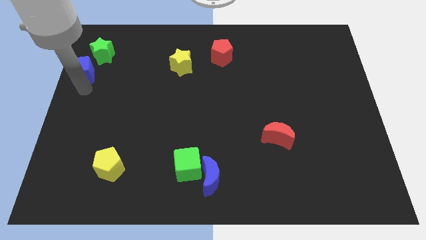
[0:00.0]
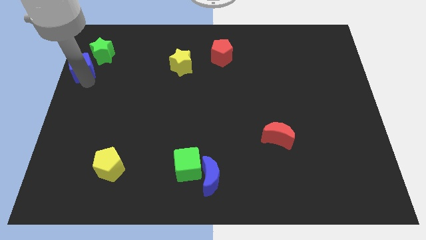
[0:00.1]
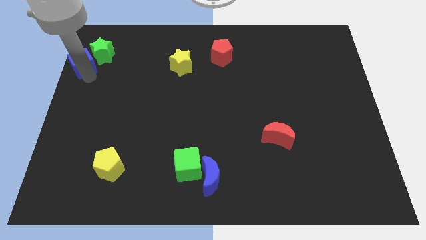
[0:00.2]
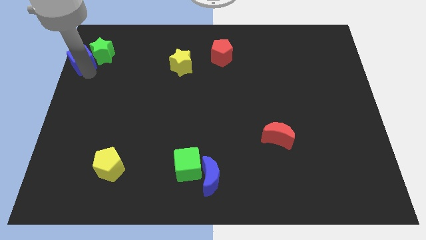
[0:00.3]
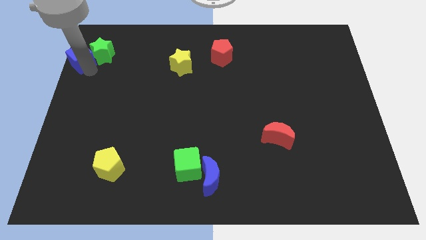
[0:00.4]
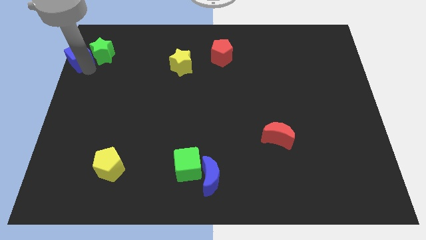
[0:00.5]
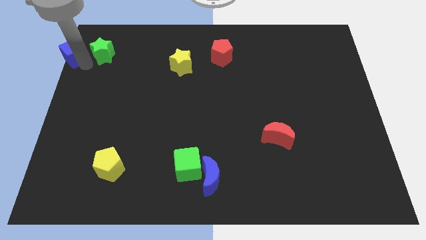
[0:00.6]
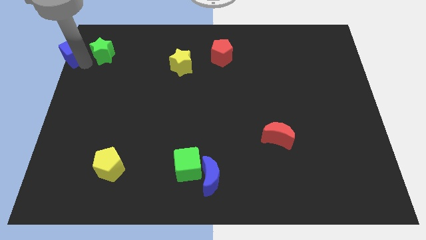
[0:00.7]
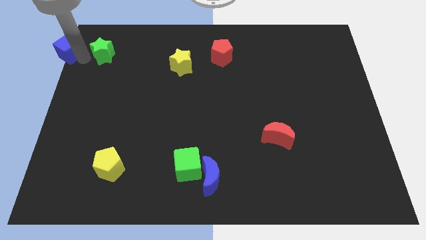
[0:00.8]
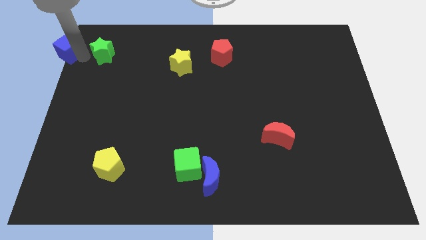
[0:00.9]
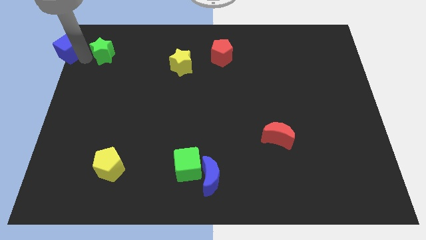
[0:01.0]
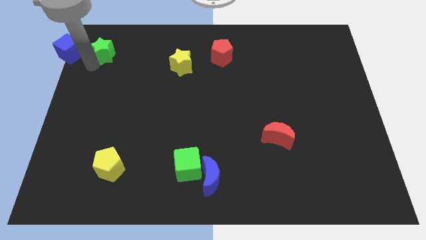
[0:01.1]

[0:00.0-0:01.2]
put the blue cube to the left side of the green star

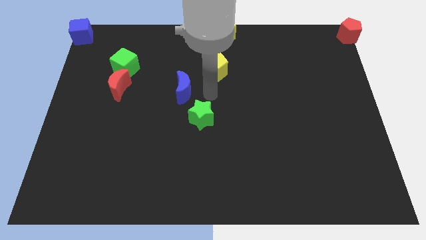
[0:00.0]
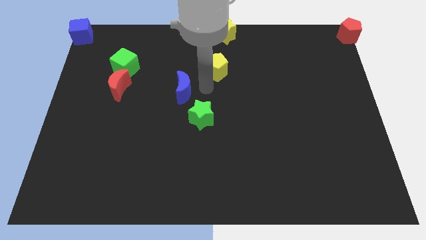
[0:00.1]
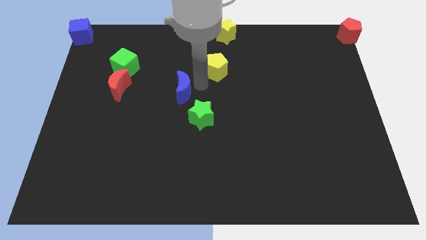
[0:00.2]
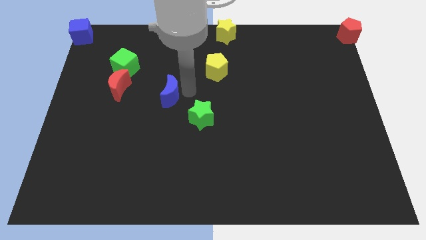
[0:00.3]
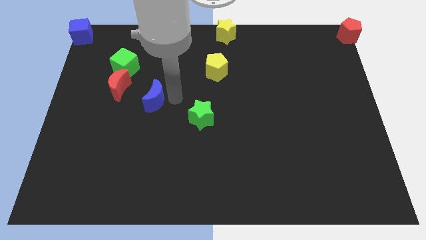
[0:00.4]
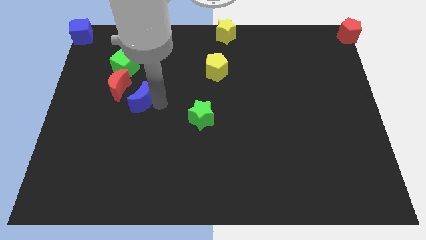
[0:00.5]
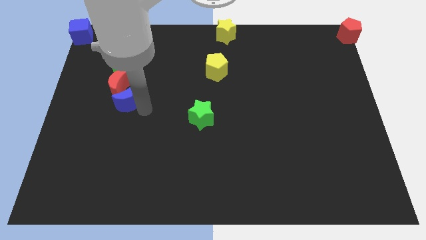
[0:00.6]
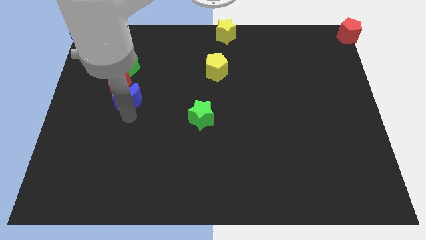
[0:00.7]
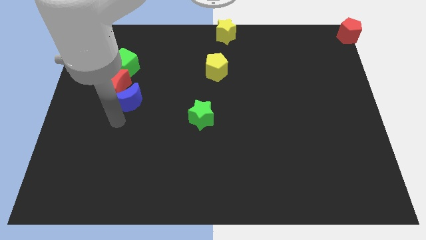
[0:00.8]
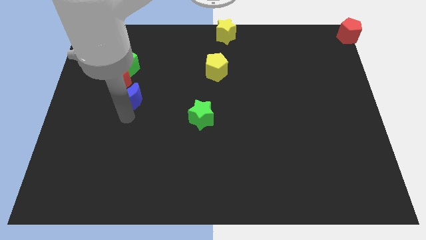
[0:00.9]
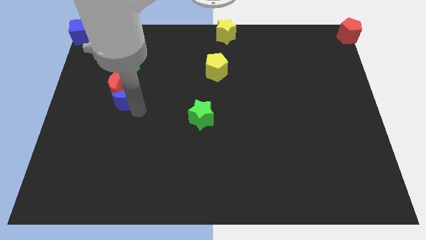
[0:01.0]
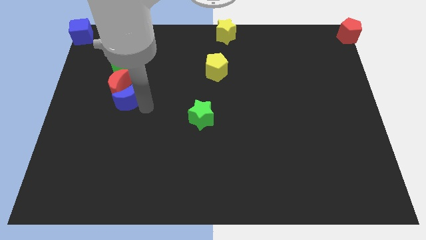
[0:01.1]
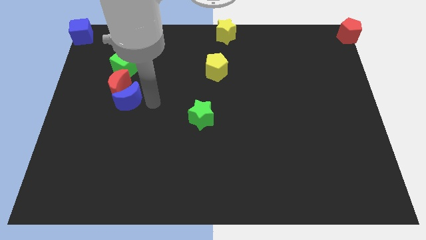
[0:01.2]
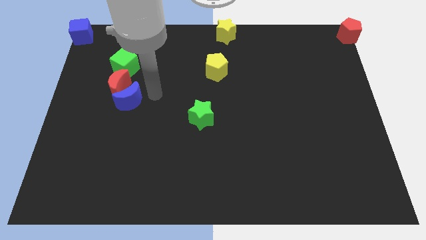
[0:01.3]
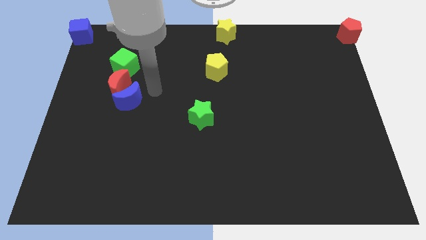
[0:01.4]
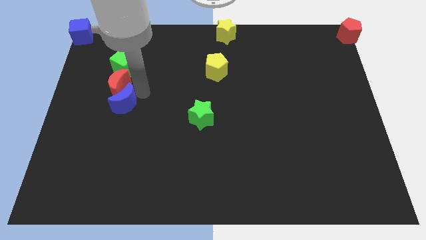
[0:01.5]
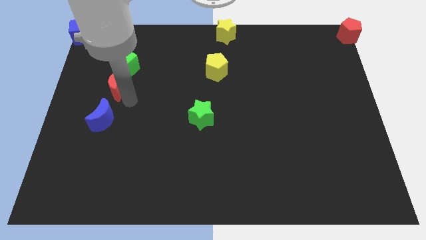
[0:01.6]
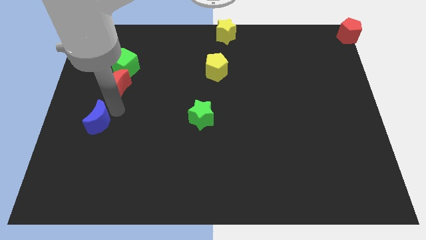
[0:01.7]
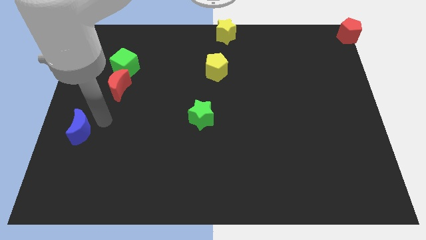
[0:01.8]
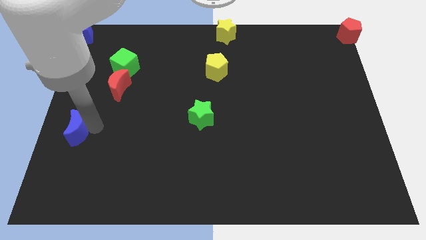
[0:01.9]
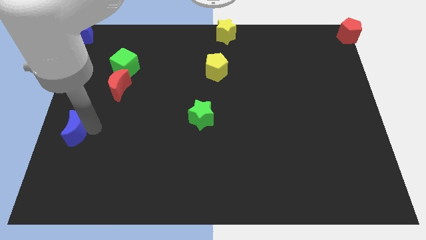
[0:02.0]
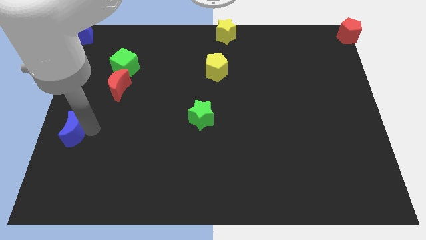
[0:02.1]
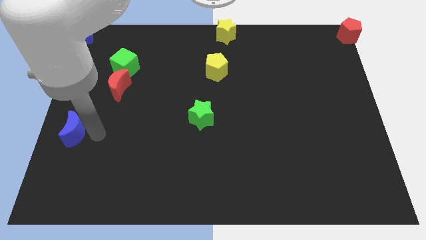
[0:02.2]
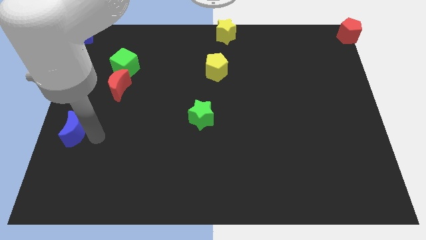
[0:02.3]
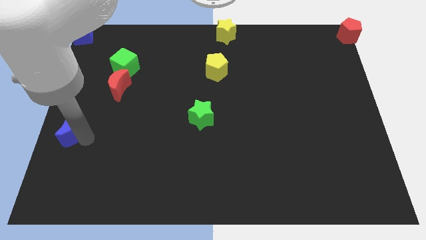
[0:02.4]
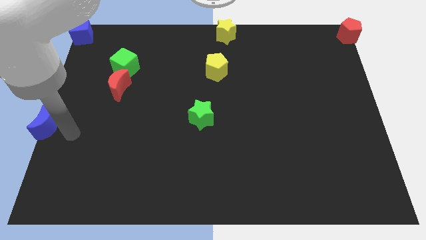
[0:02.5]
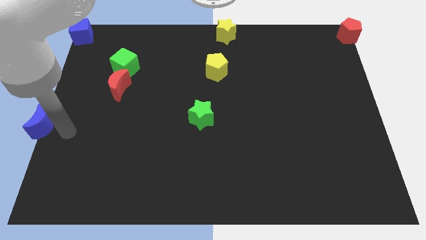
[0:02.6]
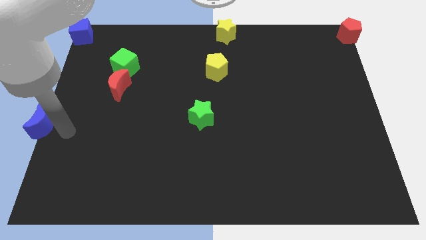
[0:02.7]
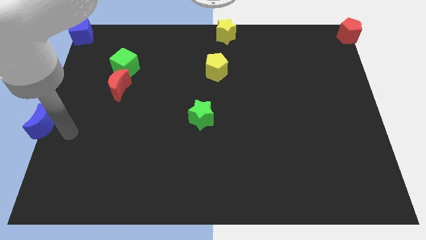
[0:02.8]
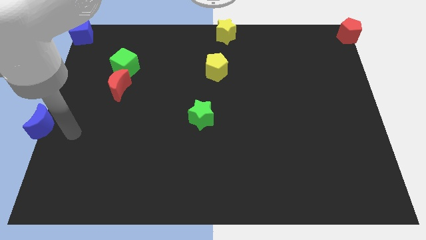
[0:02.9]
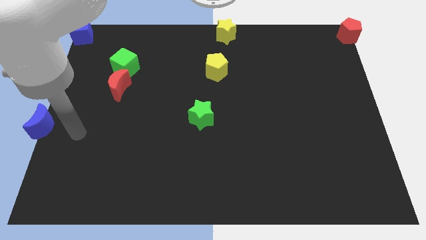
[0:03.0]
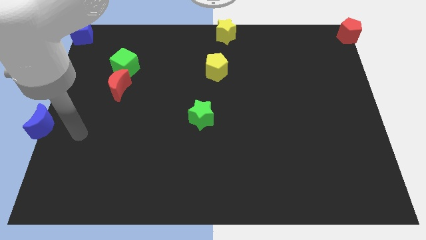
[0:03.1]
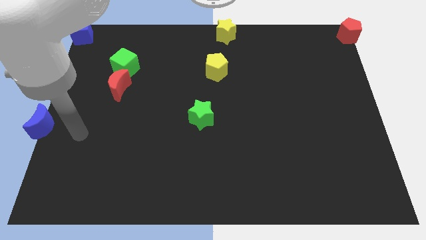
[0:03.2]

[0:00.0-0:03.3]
slide the blue crescent vertically below the blue cube

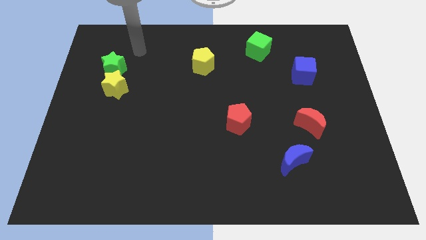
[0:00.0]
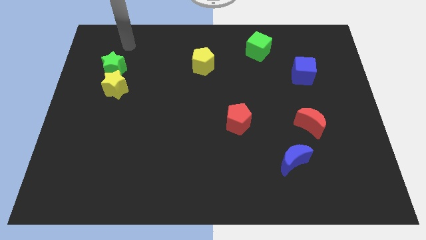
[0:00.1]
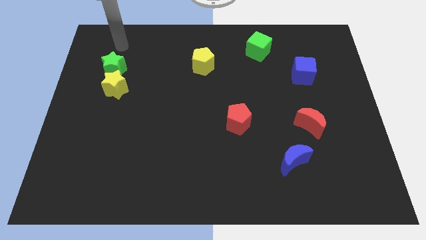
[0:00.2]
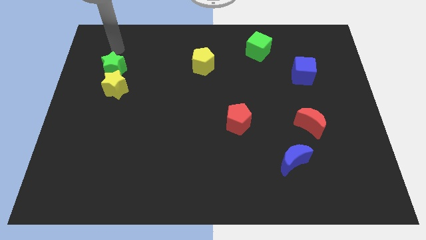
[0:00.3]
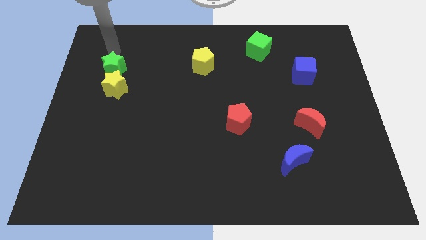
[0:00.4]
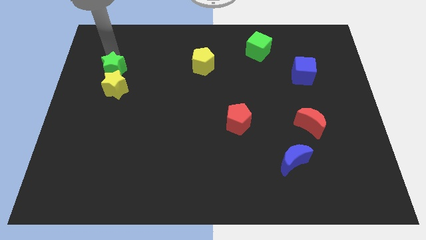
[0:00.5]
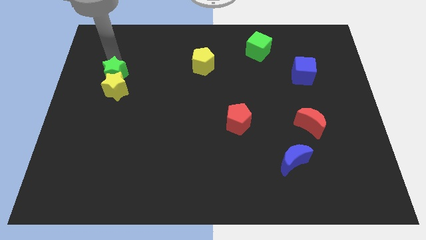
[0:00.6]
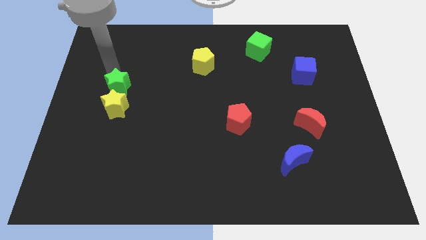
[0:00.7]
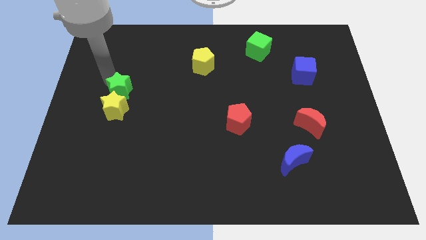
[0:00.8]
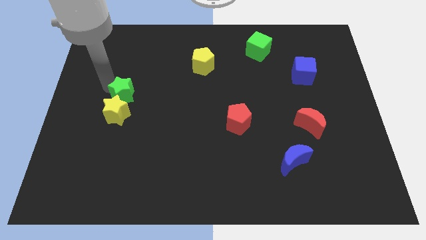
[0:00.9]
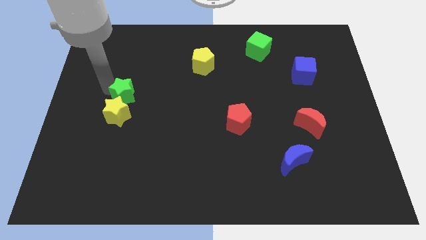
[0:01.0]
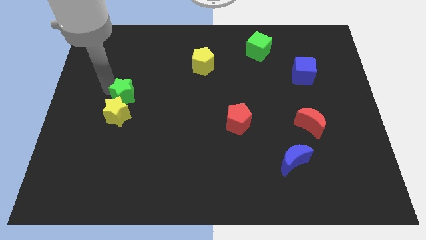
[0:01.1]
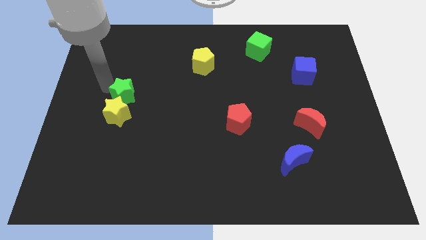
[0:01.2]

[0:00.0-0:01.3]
push the green star and yellow star slightly down

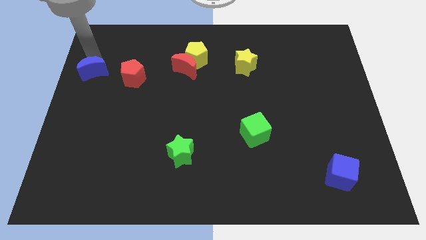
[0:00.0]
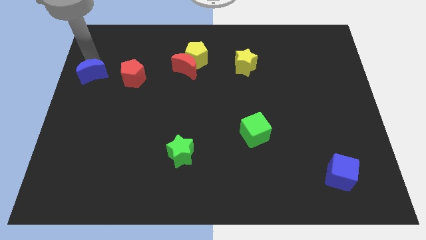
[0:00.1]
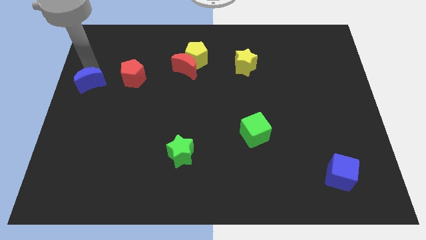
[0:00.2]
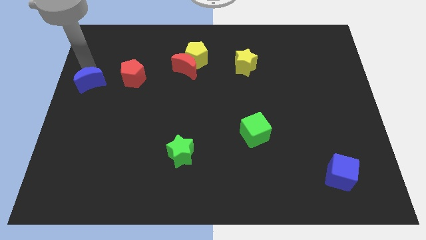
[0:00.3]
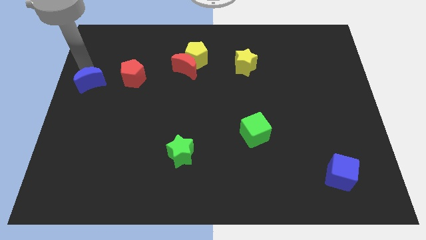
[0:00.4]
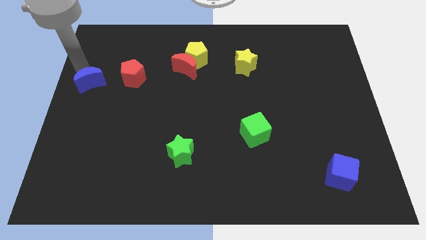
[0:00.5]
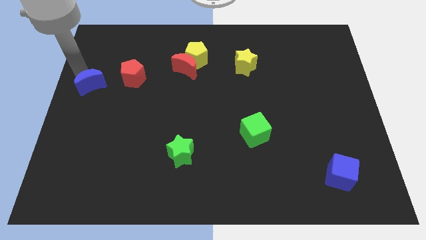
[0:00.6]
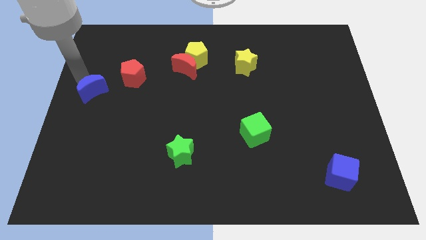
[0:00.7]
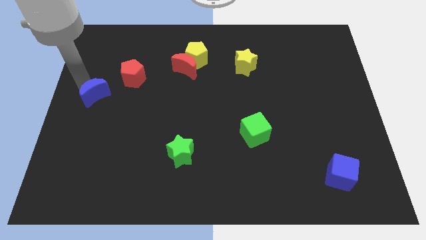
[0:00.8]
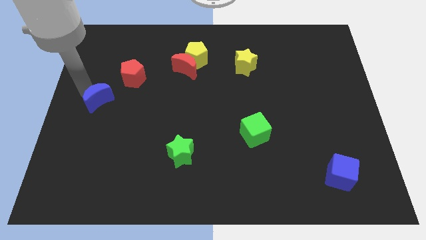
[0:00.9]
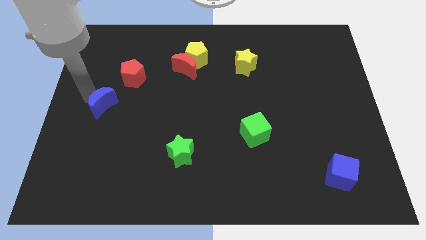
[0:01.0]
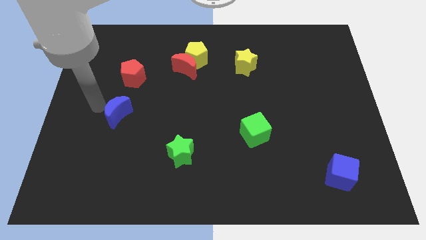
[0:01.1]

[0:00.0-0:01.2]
place blue moon to the bottom left of red pentagon

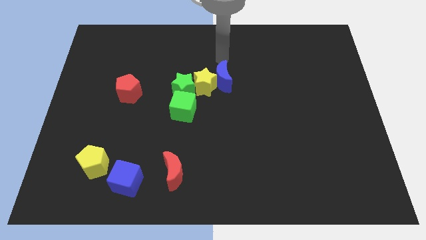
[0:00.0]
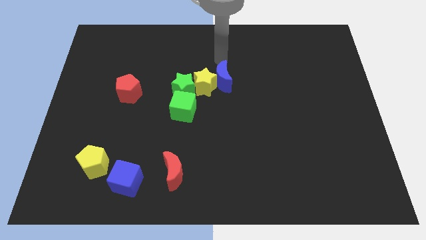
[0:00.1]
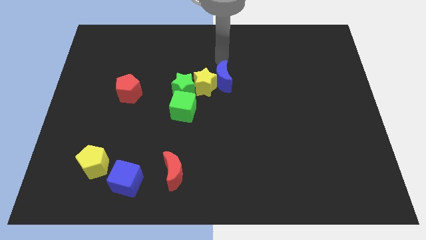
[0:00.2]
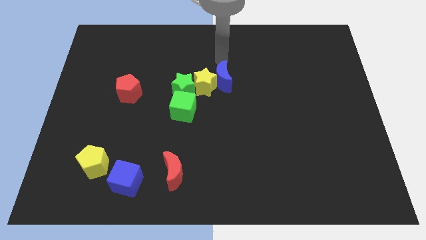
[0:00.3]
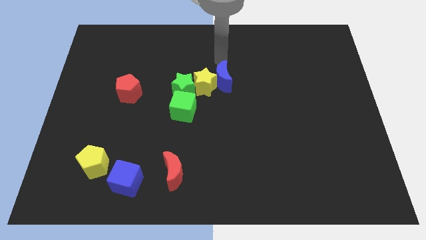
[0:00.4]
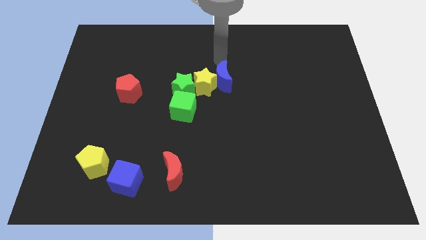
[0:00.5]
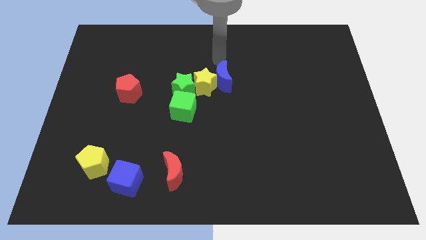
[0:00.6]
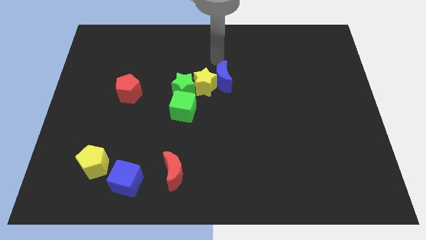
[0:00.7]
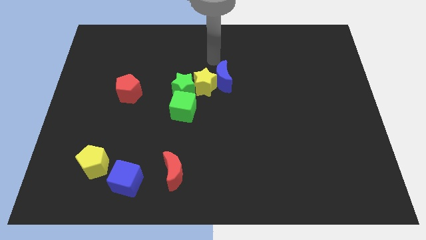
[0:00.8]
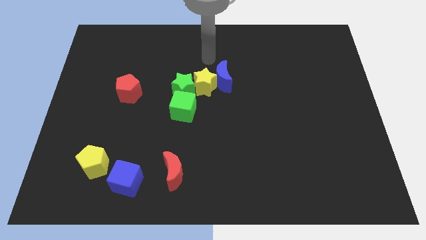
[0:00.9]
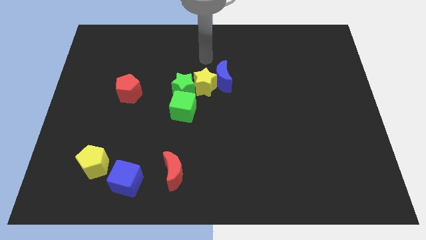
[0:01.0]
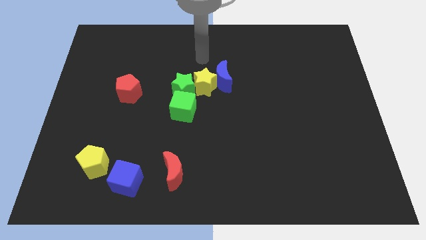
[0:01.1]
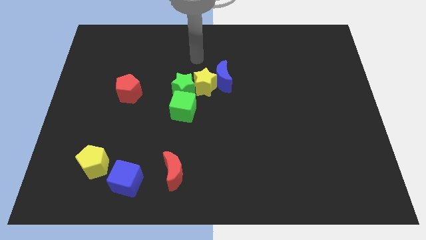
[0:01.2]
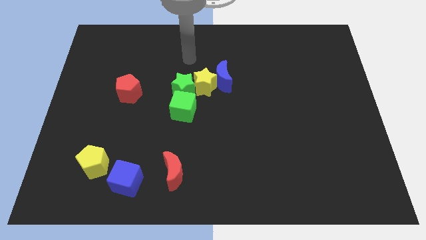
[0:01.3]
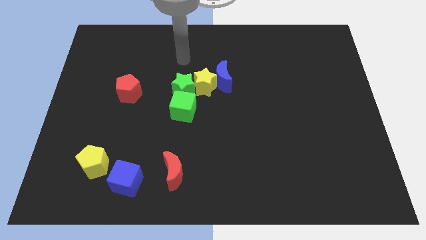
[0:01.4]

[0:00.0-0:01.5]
place your arm to the top of the green star

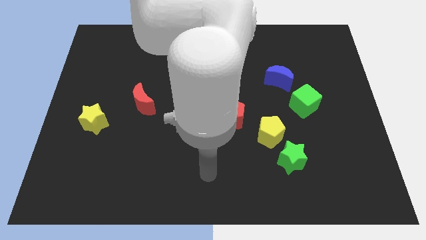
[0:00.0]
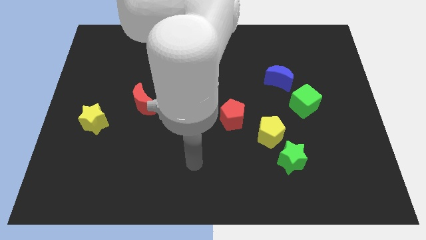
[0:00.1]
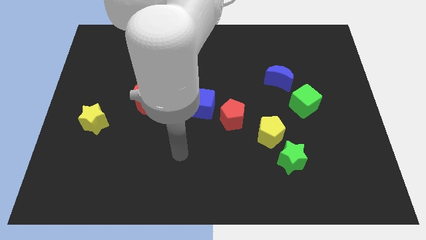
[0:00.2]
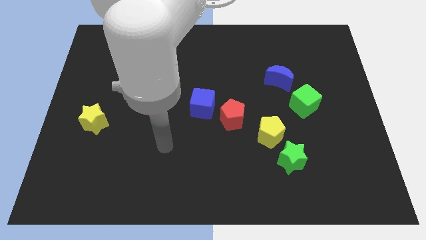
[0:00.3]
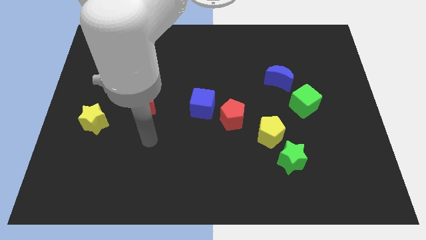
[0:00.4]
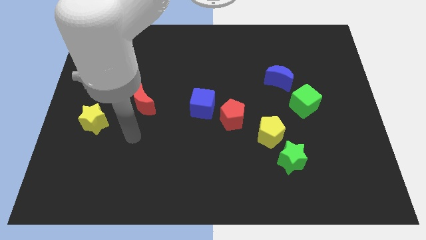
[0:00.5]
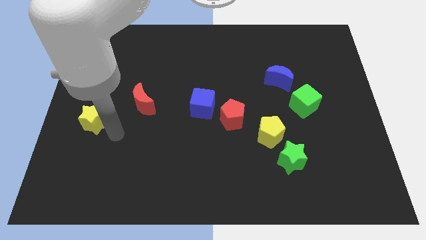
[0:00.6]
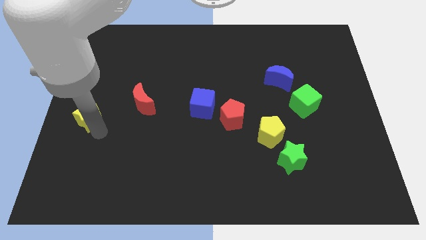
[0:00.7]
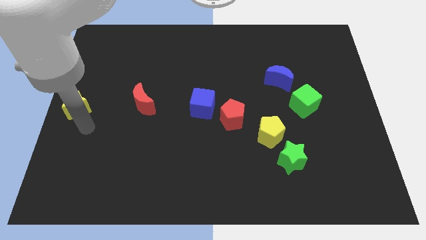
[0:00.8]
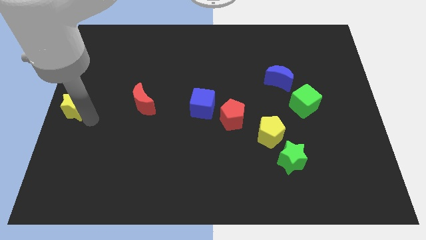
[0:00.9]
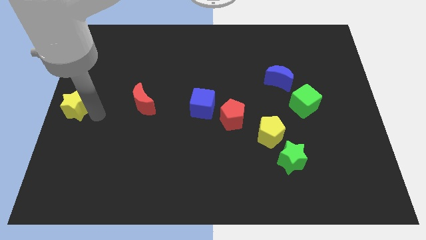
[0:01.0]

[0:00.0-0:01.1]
slide yellow star to the center left
